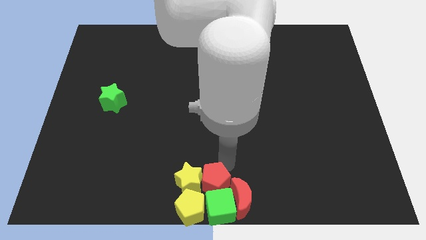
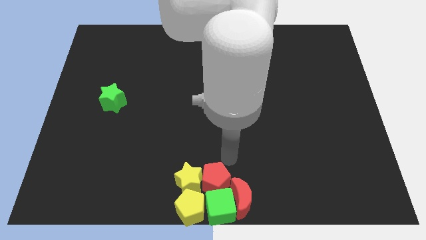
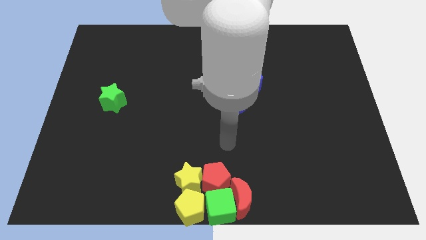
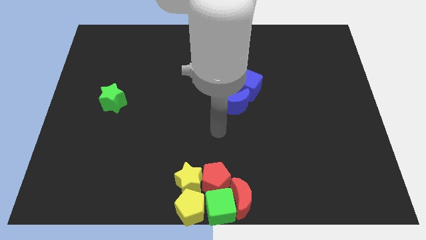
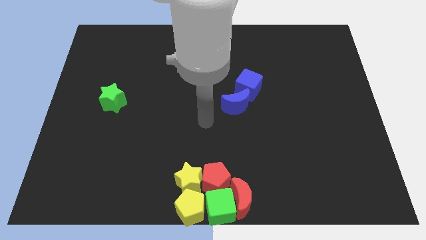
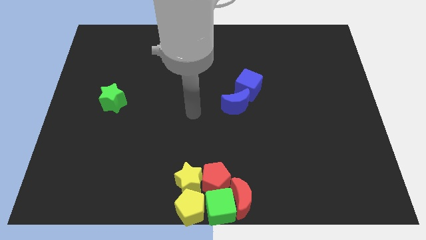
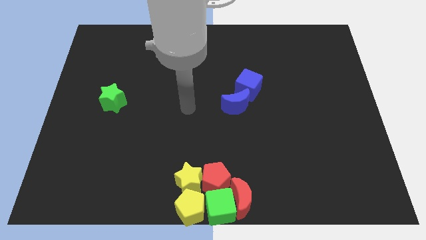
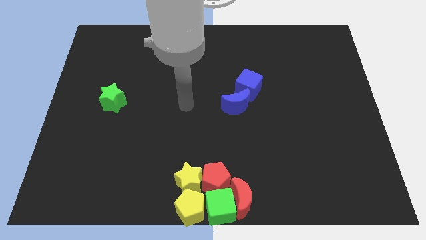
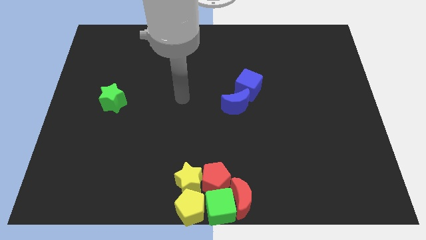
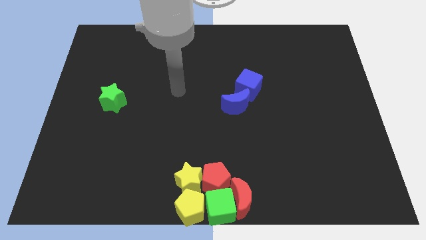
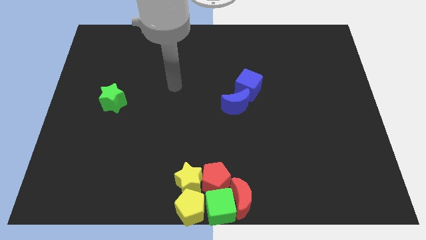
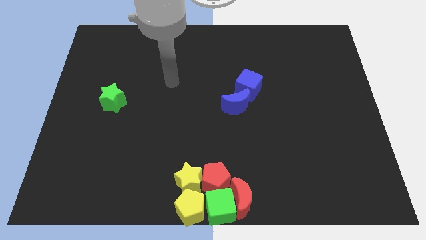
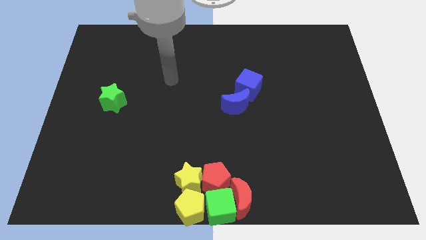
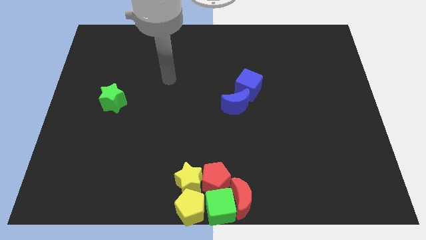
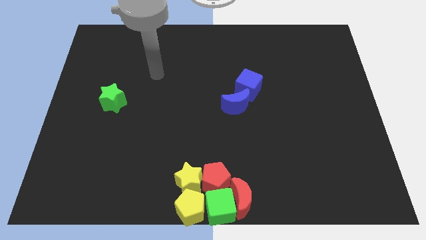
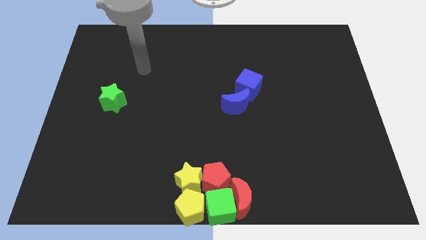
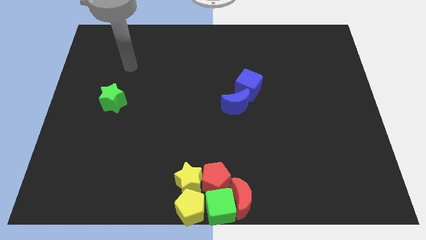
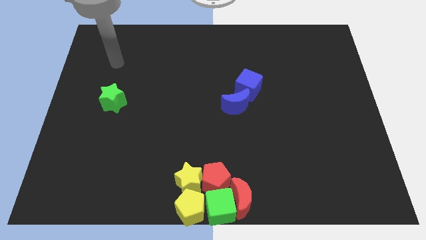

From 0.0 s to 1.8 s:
move arm away from red pentagon

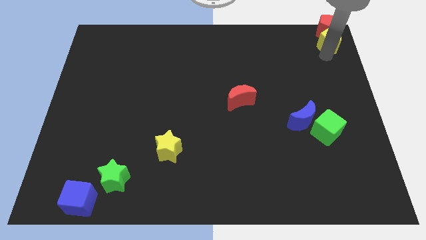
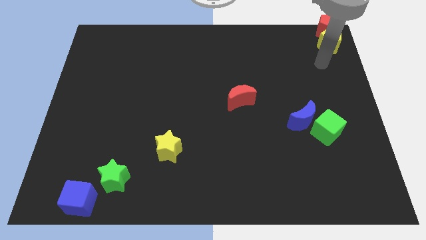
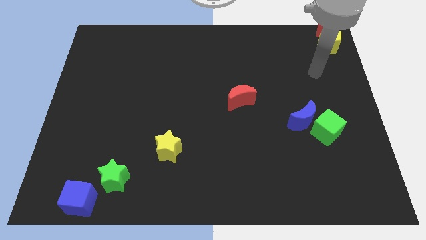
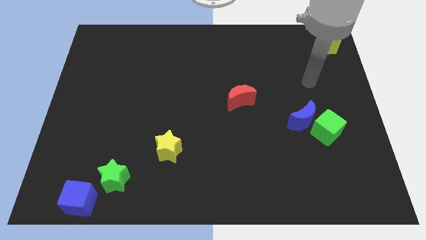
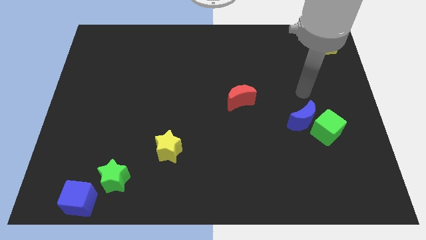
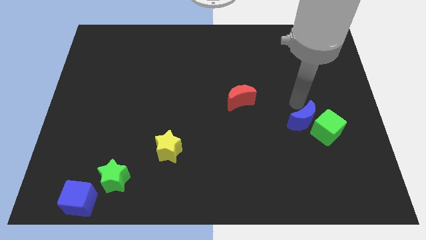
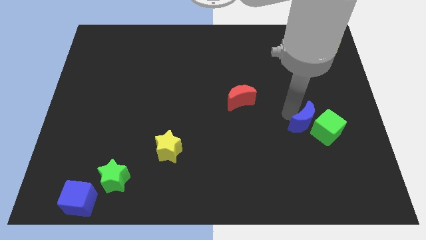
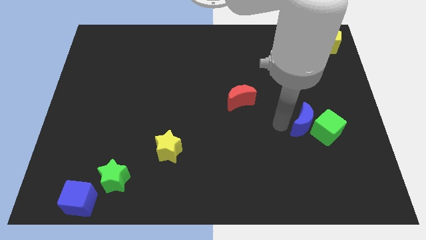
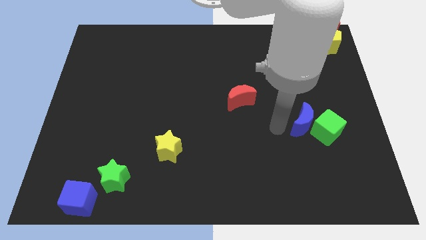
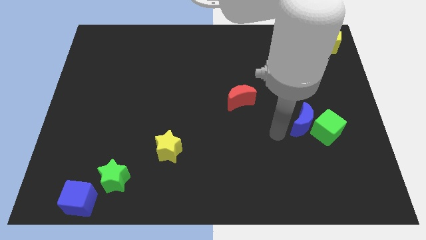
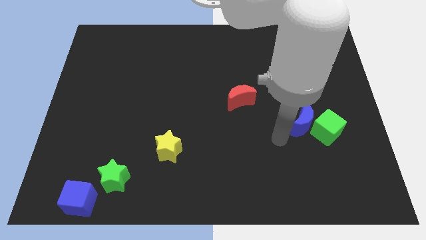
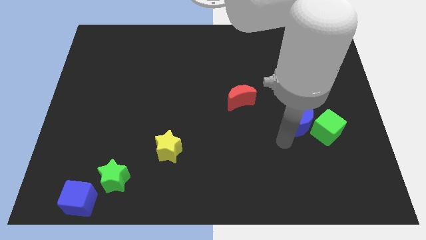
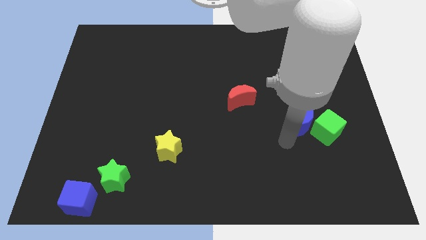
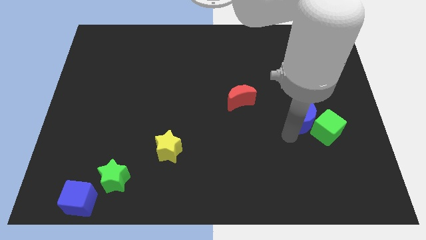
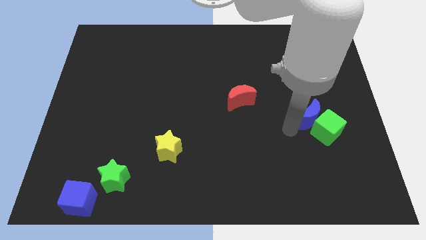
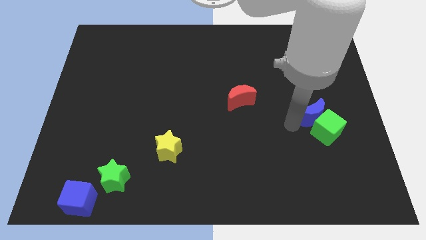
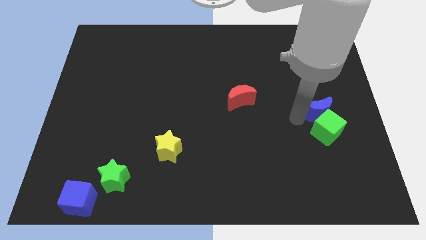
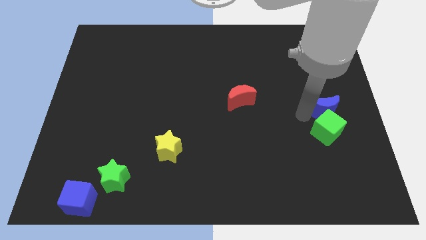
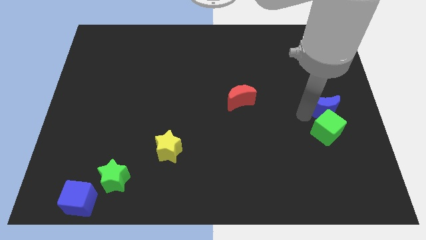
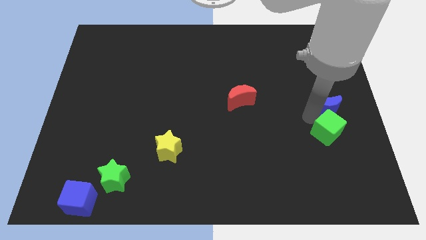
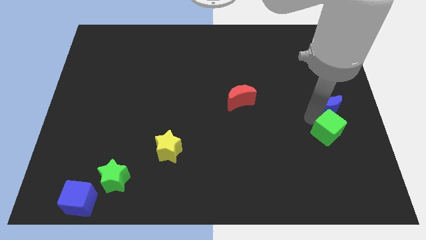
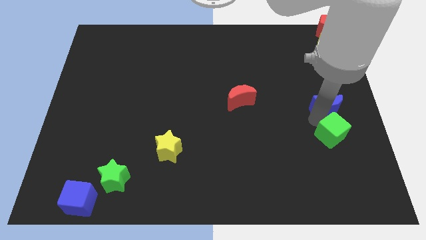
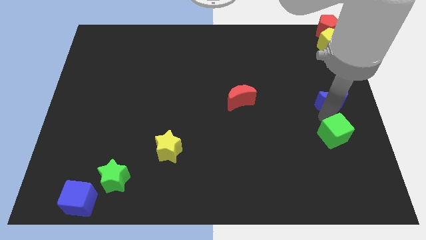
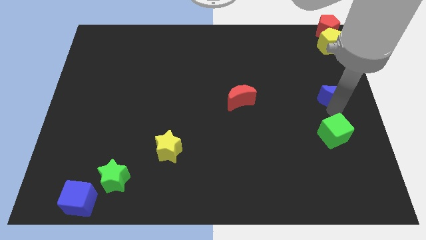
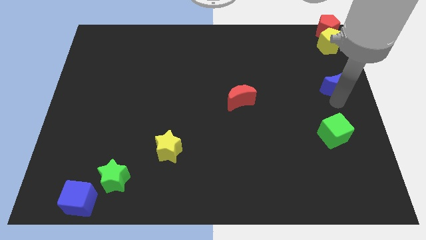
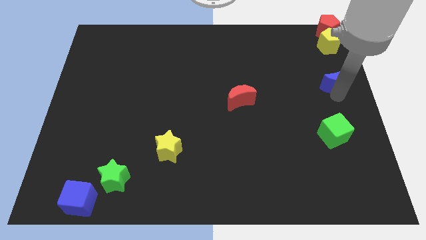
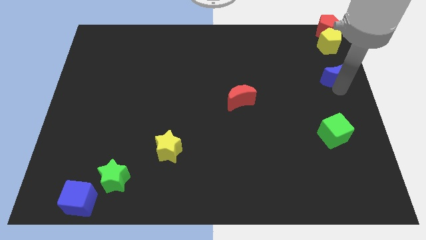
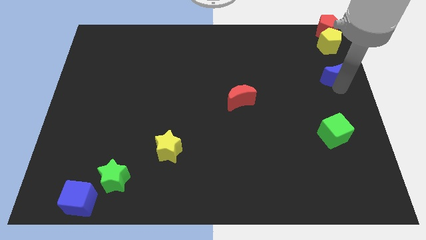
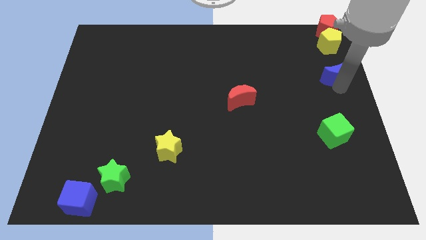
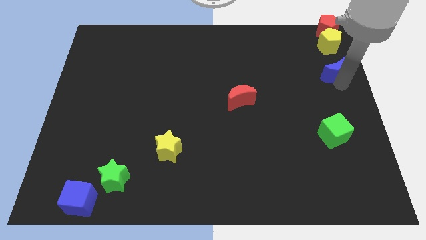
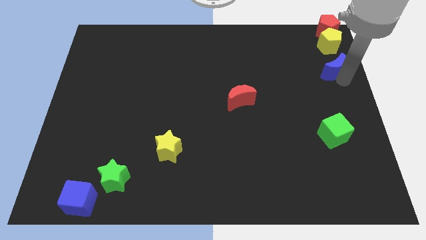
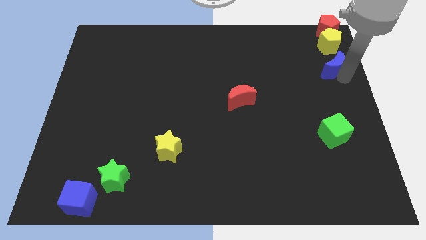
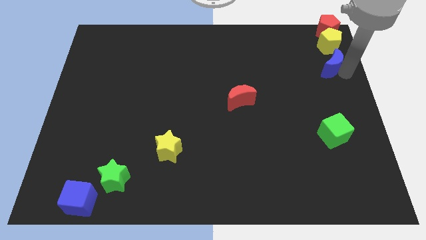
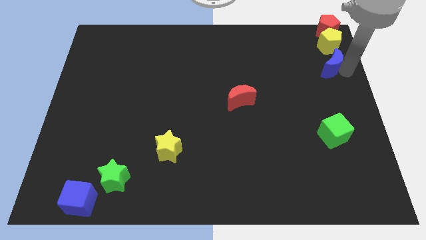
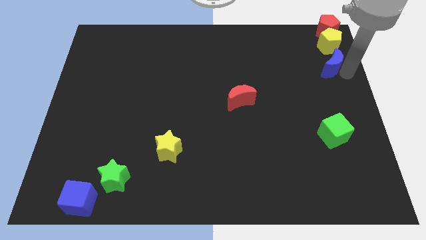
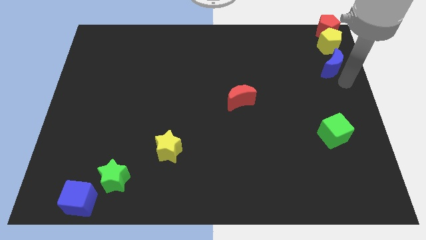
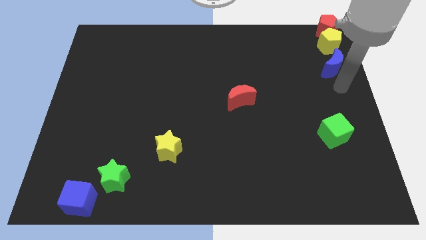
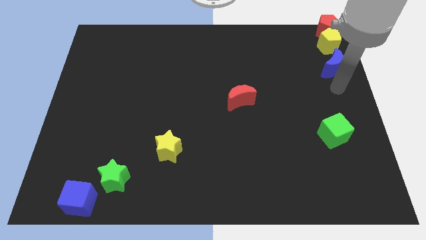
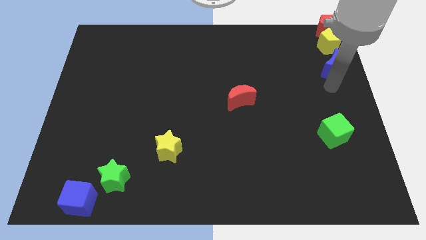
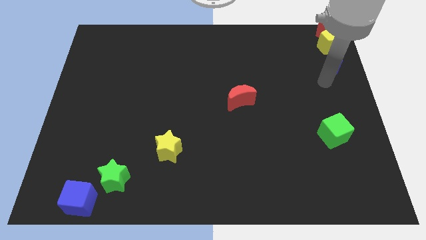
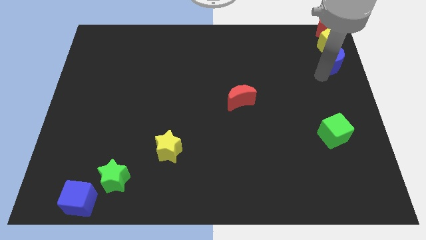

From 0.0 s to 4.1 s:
move the blue crescent towards the top right corner

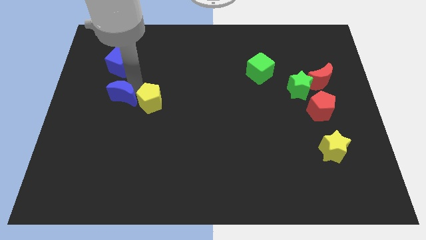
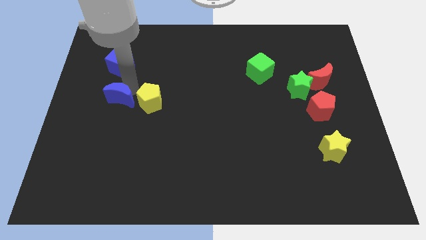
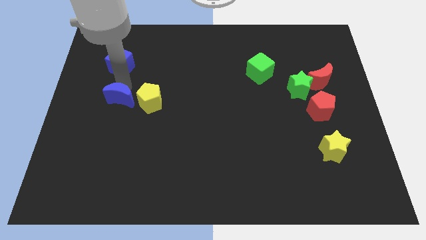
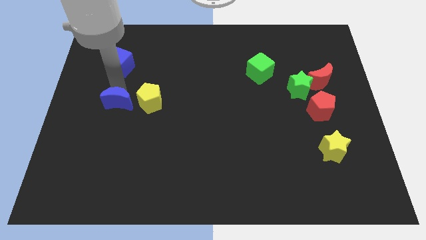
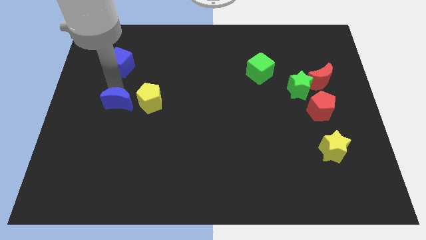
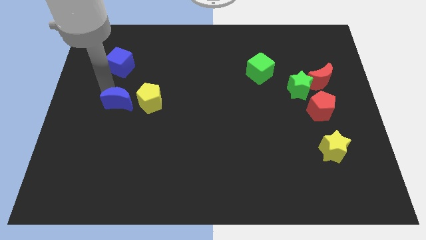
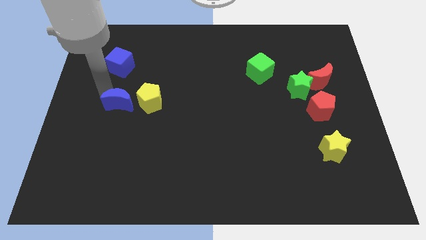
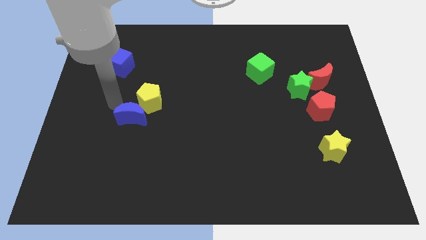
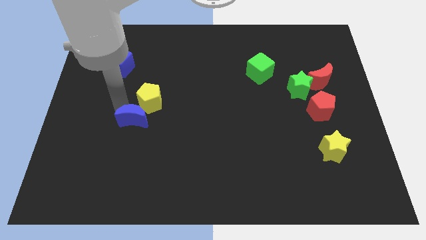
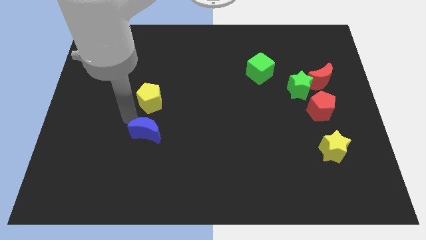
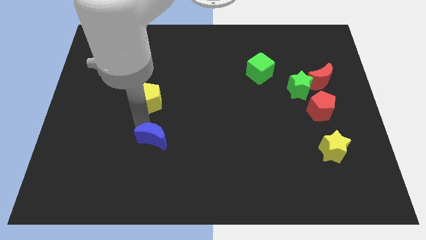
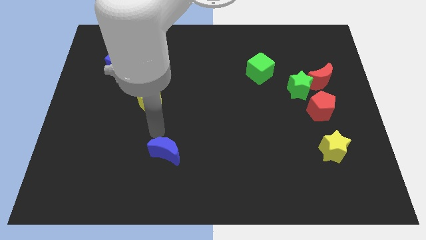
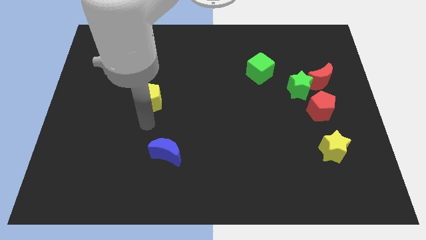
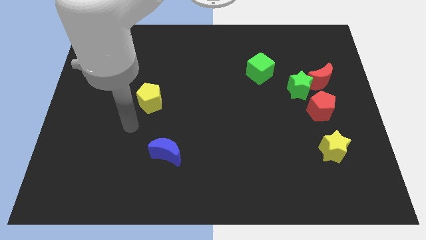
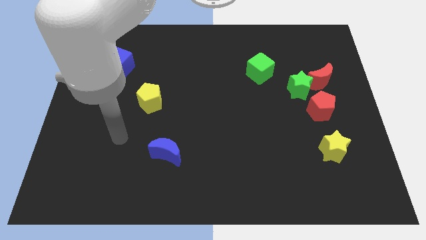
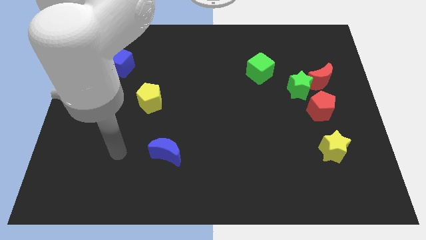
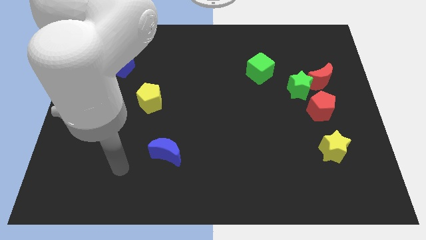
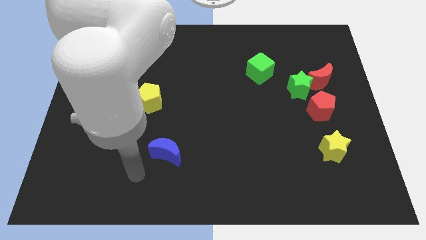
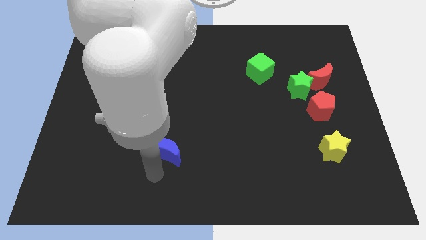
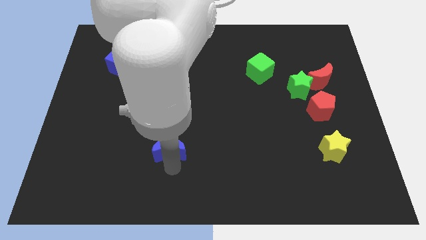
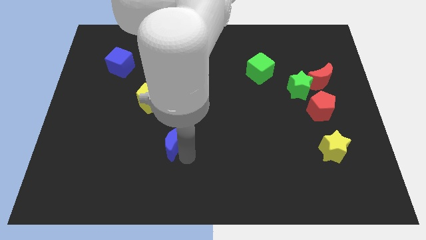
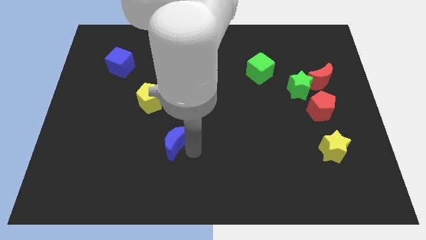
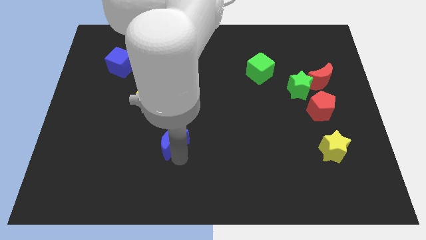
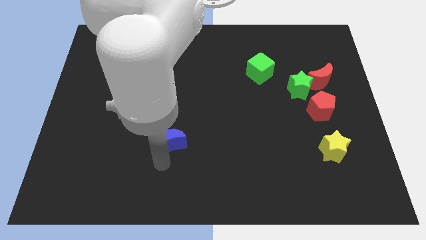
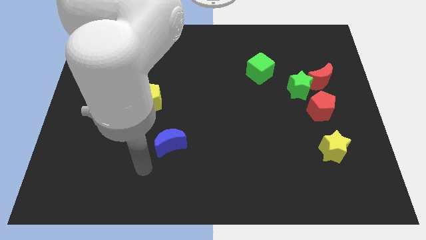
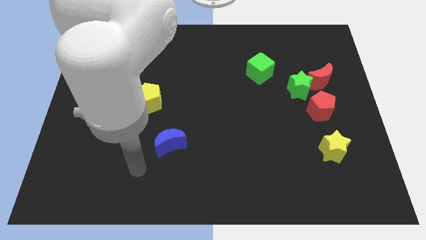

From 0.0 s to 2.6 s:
place the blue moon towards the bottom left to the yellow star

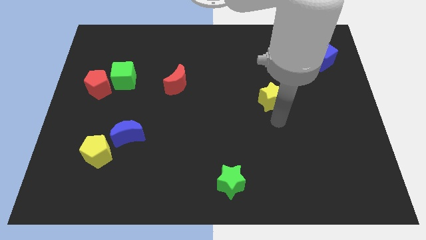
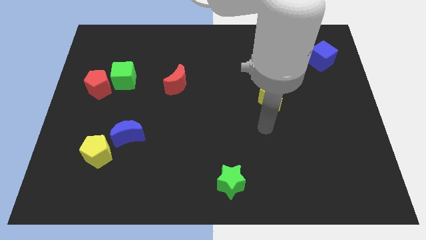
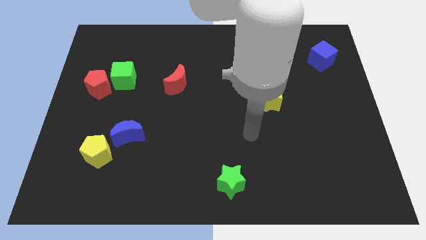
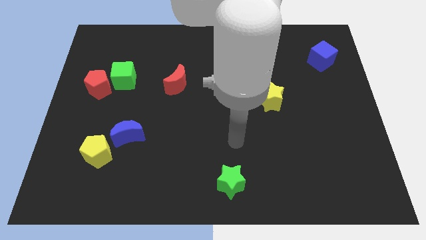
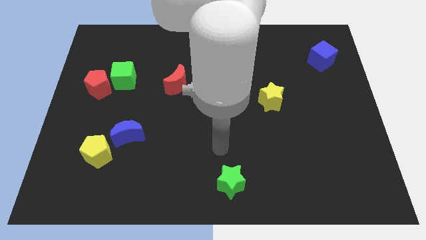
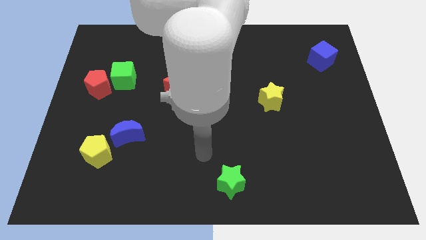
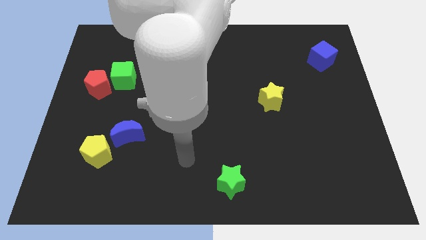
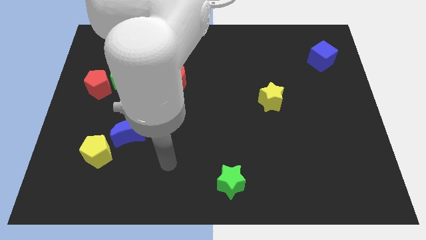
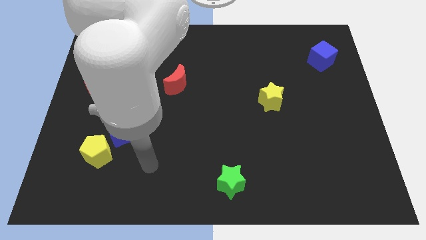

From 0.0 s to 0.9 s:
point the arm to the right of the yellow pentagon
